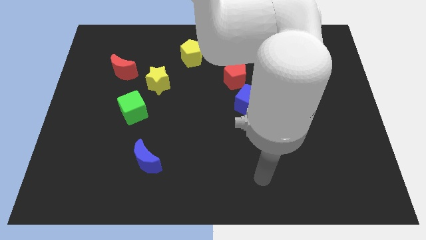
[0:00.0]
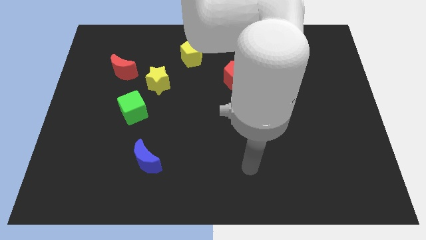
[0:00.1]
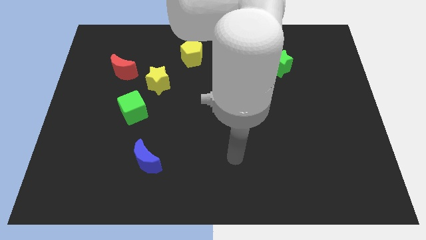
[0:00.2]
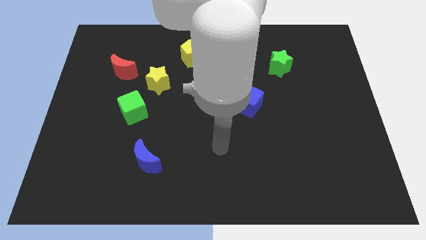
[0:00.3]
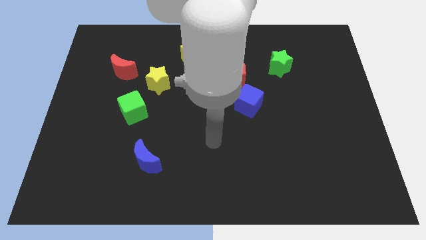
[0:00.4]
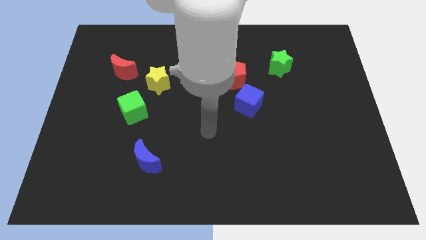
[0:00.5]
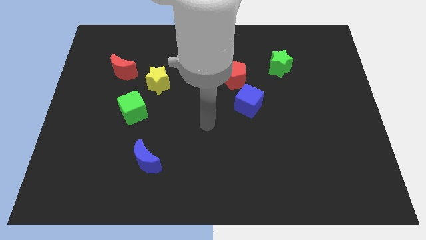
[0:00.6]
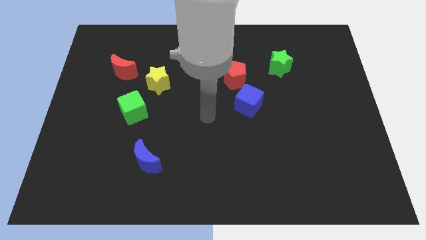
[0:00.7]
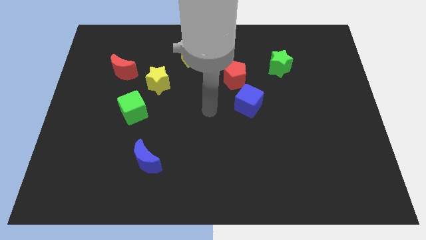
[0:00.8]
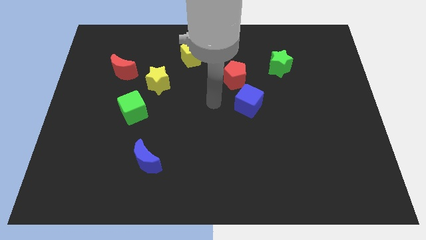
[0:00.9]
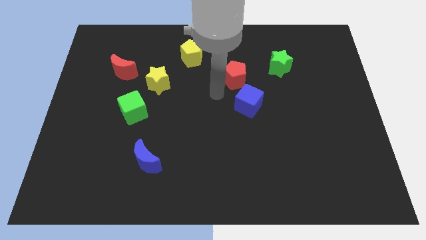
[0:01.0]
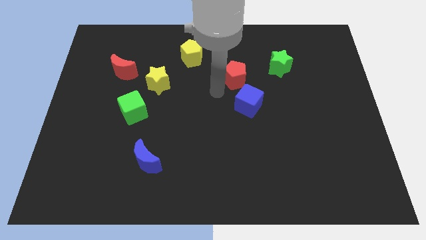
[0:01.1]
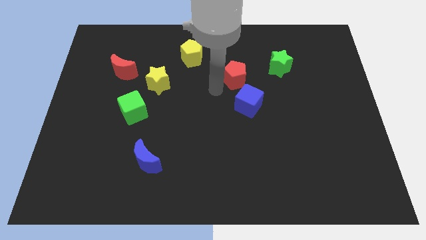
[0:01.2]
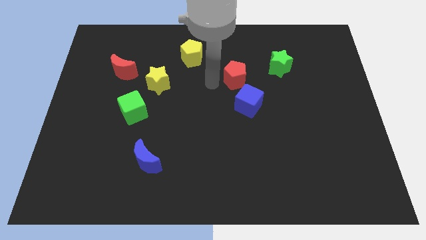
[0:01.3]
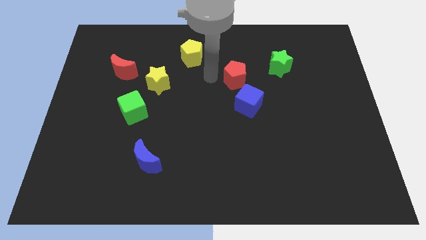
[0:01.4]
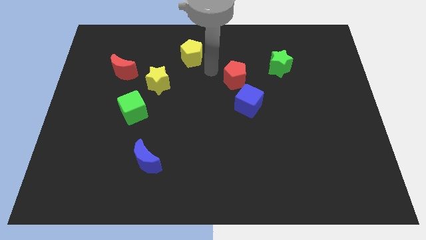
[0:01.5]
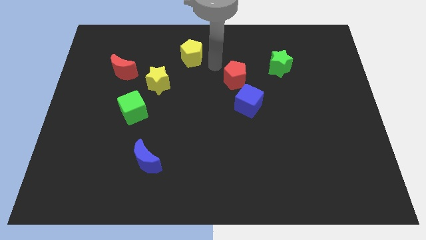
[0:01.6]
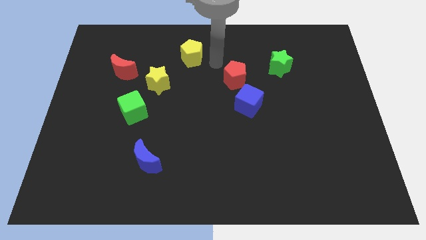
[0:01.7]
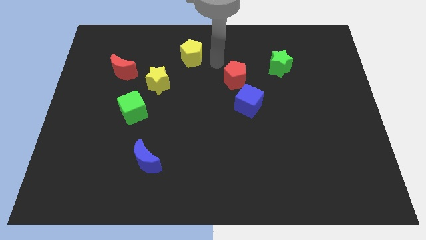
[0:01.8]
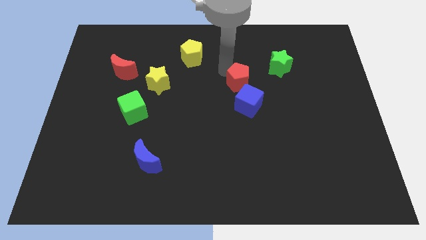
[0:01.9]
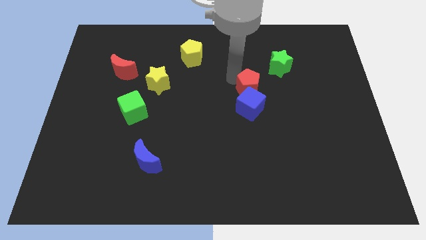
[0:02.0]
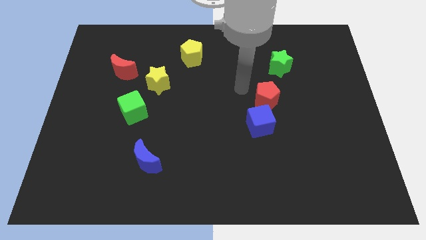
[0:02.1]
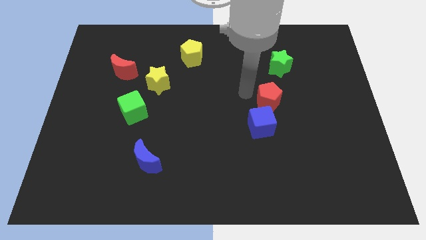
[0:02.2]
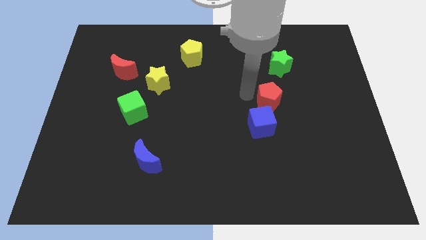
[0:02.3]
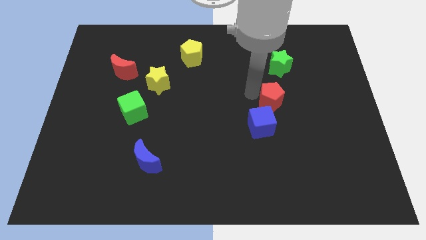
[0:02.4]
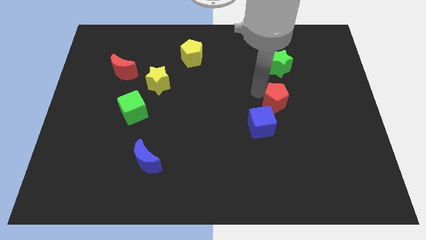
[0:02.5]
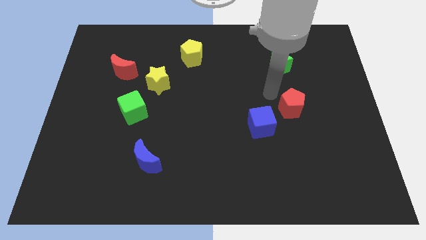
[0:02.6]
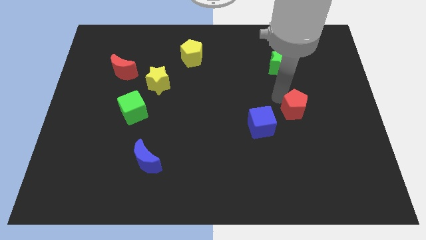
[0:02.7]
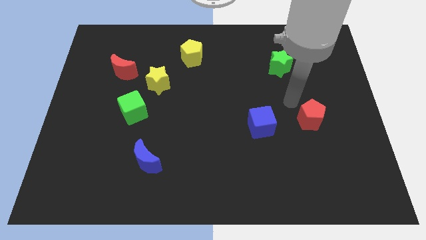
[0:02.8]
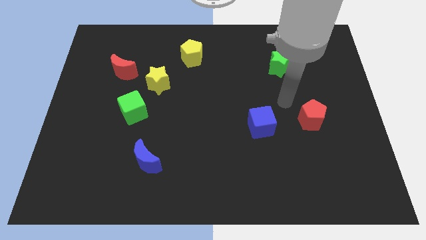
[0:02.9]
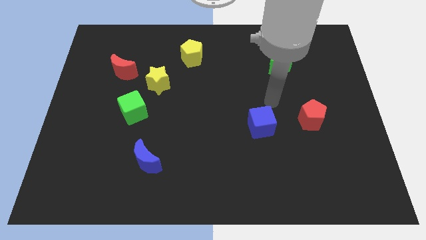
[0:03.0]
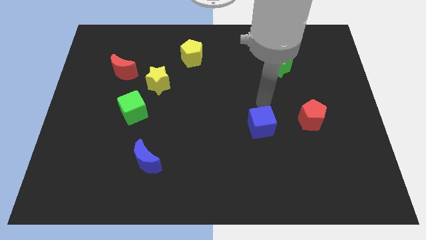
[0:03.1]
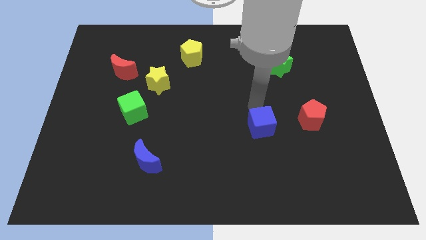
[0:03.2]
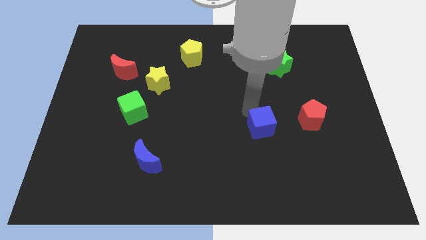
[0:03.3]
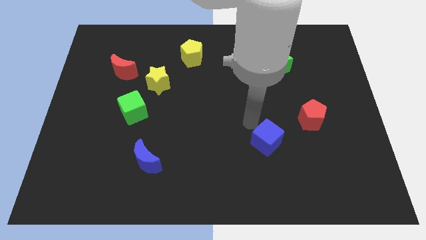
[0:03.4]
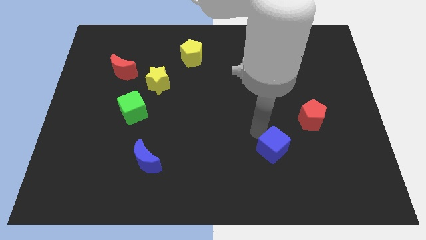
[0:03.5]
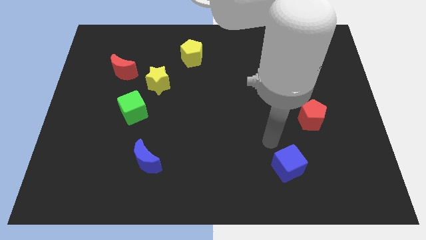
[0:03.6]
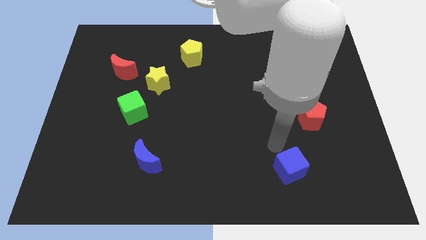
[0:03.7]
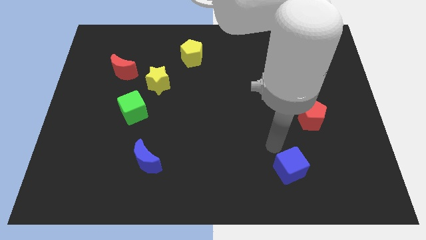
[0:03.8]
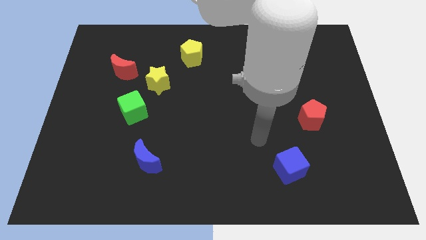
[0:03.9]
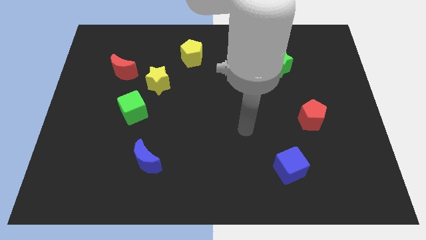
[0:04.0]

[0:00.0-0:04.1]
push the red pentagon and the blue cube towards the bottom right of the board

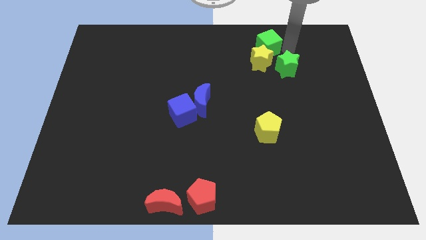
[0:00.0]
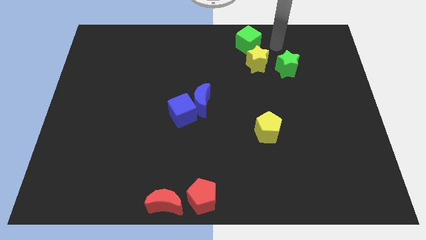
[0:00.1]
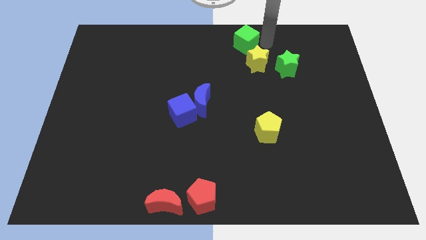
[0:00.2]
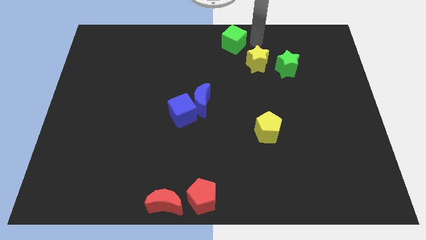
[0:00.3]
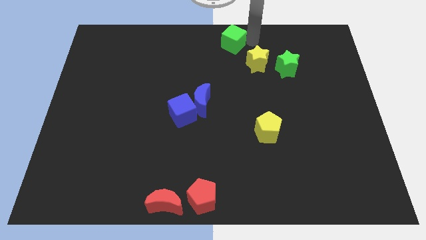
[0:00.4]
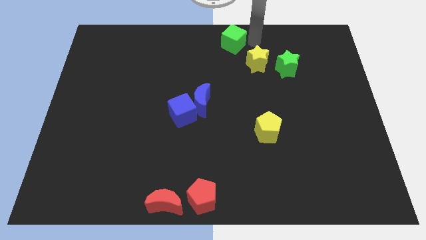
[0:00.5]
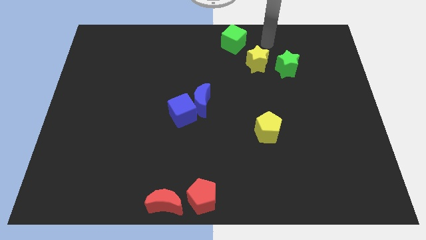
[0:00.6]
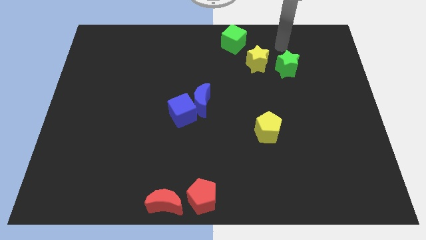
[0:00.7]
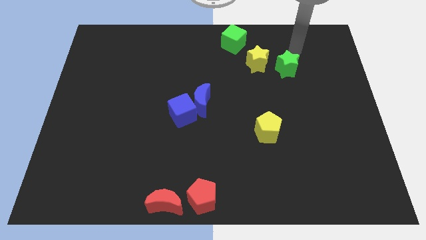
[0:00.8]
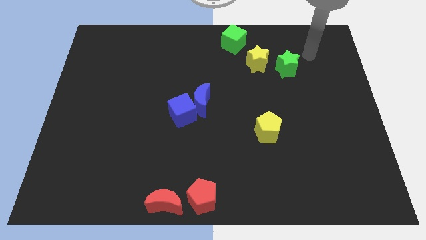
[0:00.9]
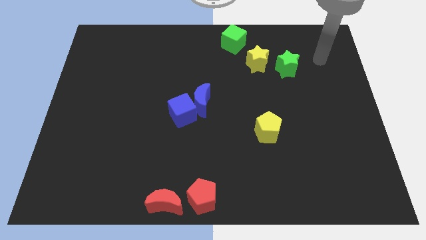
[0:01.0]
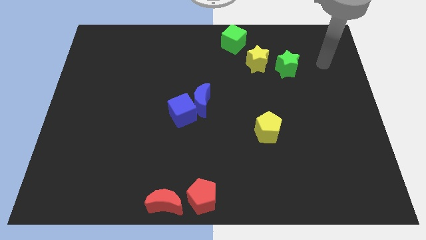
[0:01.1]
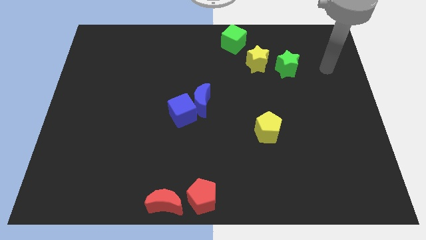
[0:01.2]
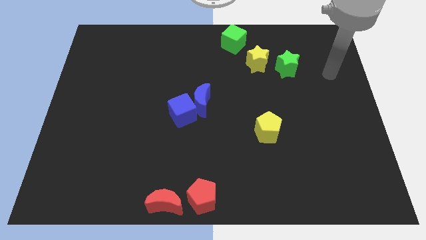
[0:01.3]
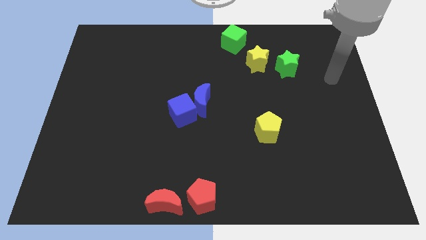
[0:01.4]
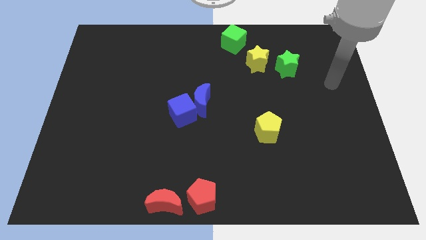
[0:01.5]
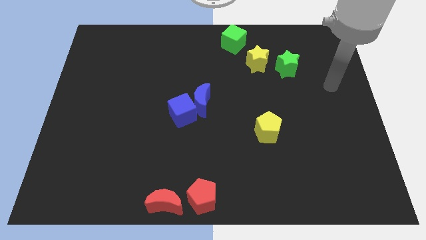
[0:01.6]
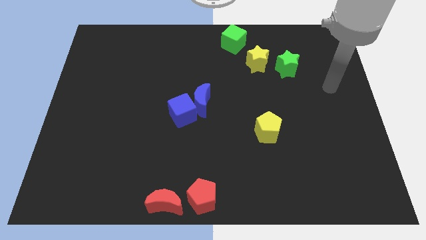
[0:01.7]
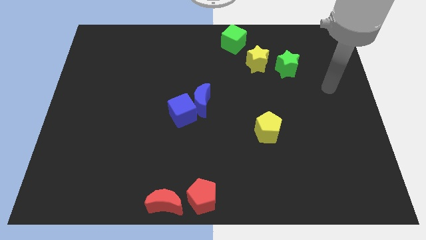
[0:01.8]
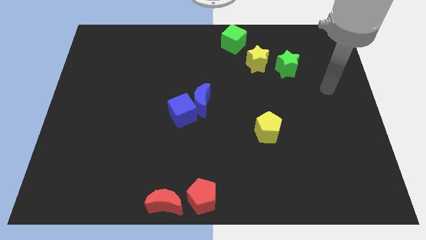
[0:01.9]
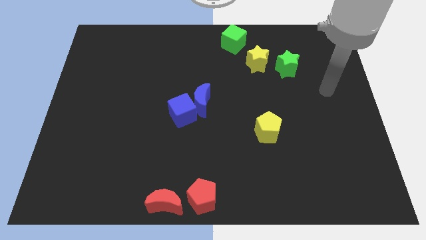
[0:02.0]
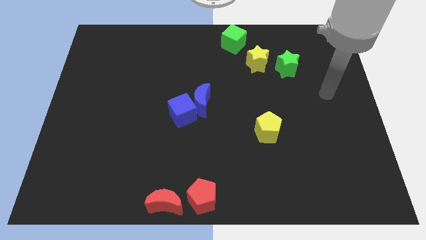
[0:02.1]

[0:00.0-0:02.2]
move green block to the top center of the board

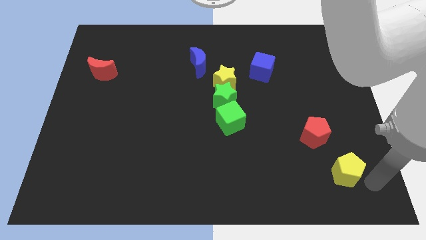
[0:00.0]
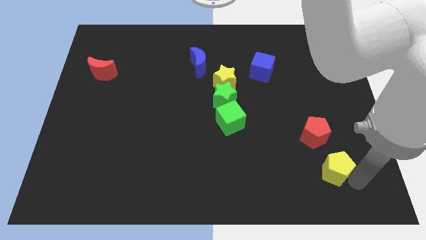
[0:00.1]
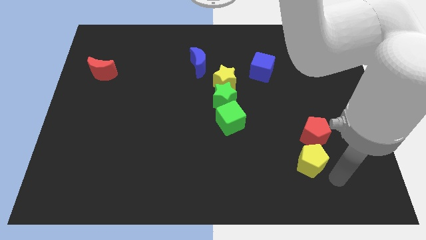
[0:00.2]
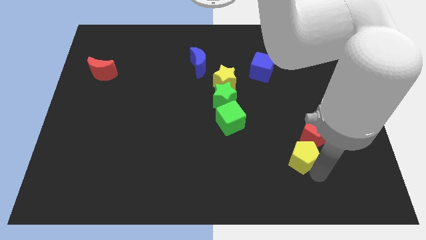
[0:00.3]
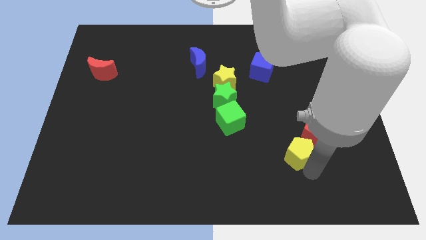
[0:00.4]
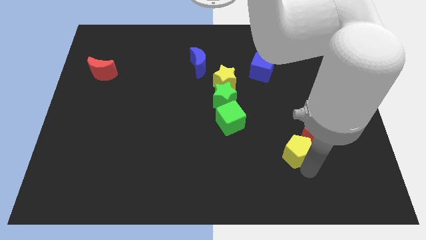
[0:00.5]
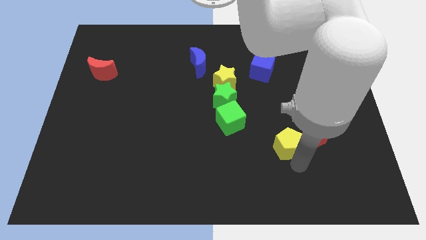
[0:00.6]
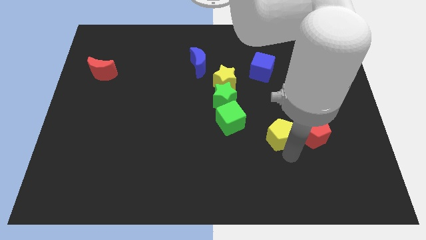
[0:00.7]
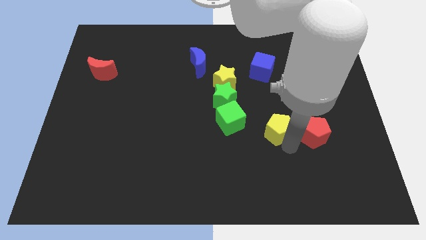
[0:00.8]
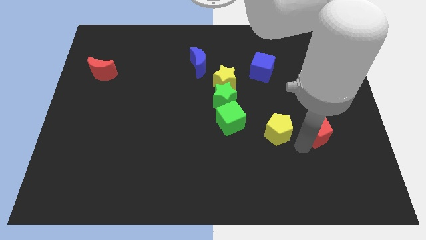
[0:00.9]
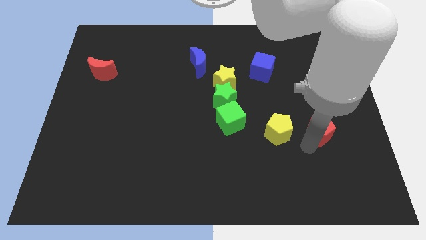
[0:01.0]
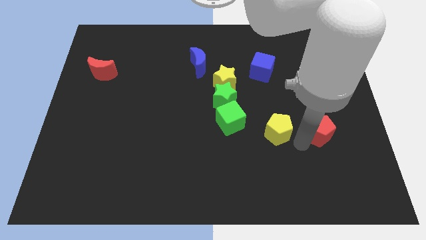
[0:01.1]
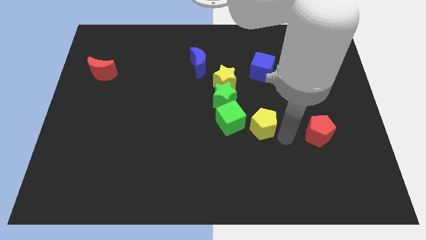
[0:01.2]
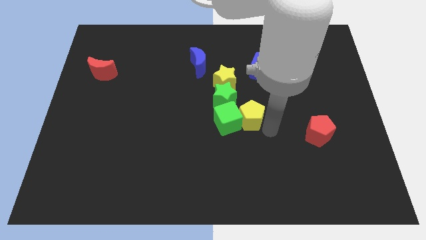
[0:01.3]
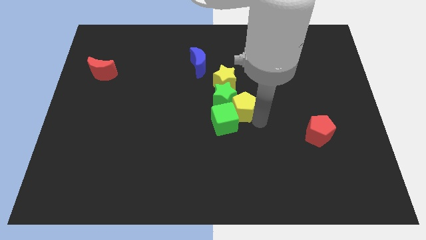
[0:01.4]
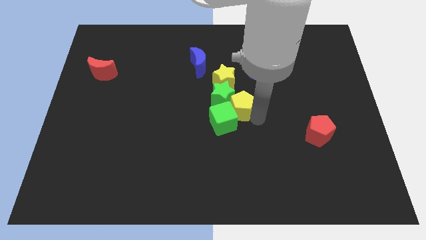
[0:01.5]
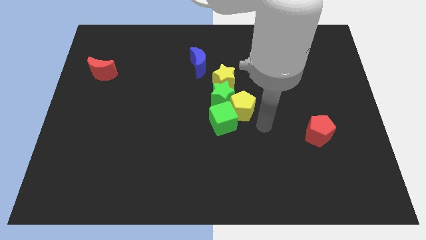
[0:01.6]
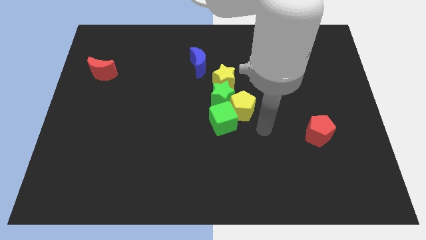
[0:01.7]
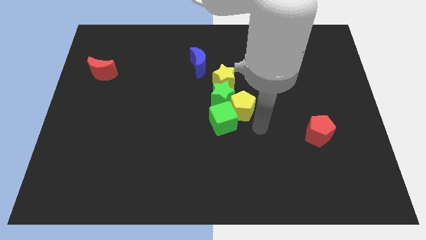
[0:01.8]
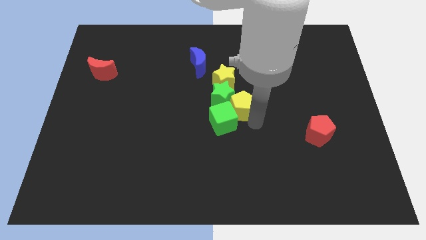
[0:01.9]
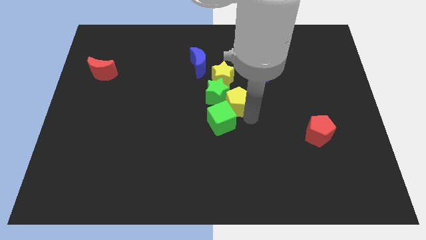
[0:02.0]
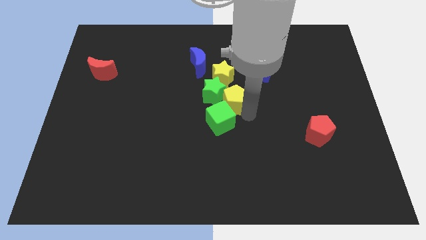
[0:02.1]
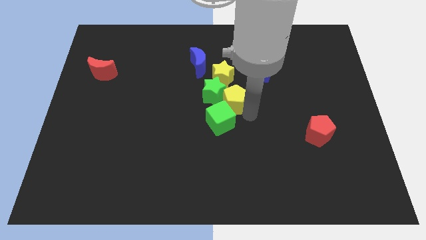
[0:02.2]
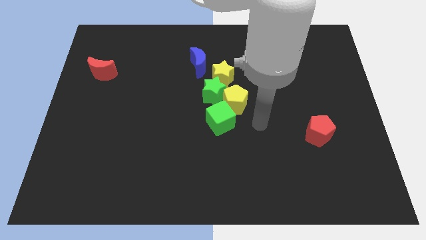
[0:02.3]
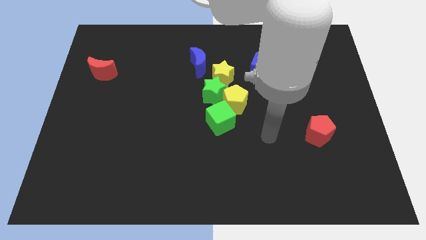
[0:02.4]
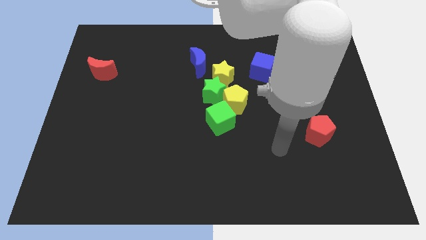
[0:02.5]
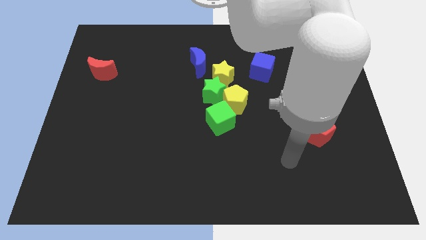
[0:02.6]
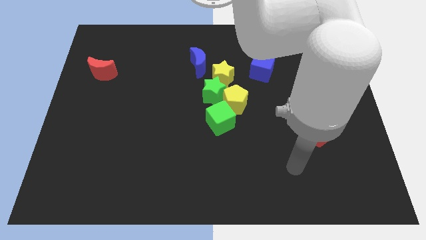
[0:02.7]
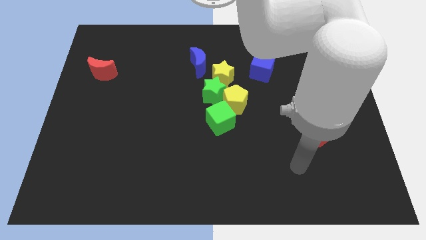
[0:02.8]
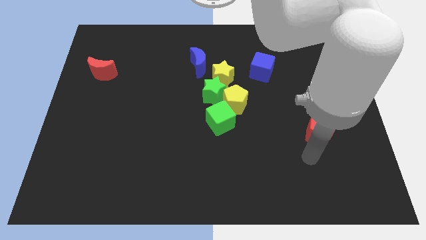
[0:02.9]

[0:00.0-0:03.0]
push the yellow pentagon in between the green star and green cube
